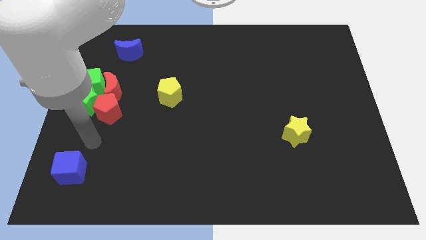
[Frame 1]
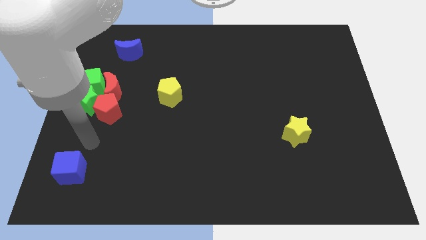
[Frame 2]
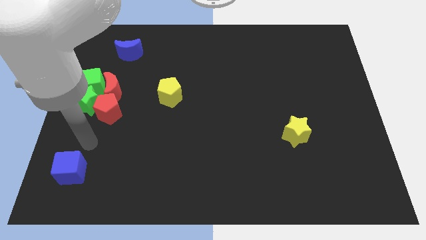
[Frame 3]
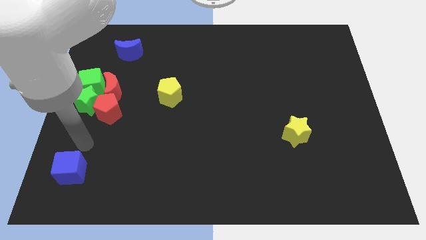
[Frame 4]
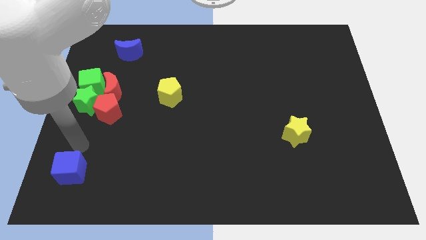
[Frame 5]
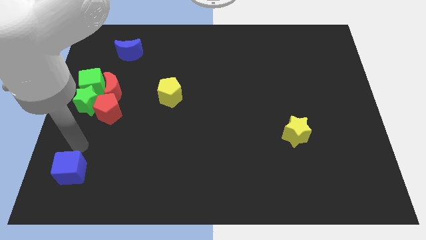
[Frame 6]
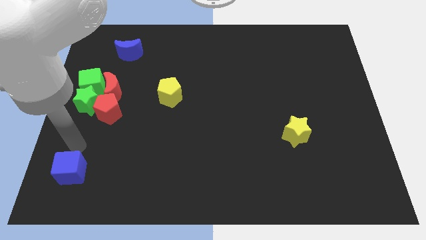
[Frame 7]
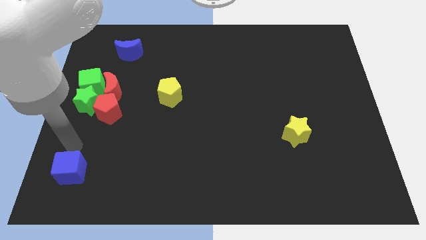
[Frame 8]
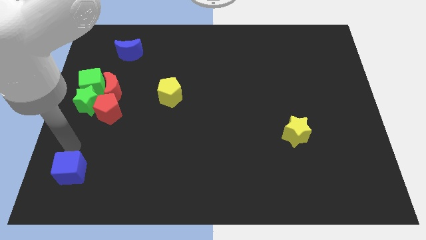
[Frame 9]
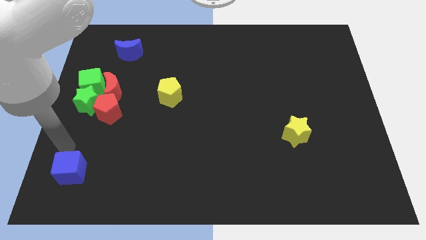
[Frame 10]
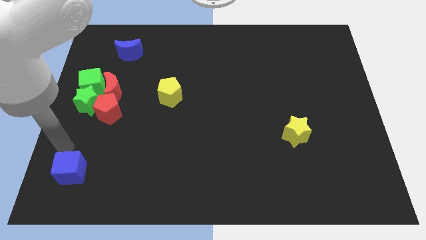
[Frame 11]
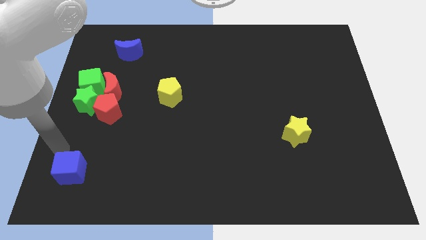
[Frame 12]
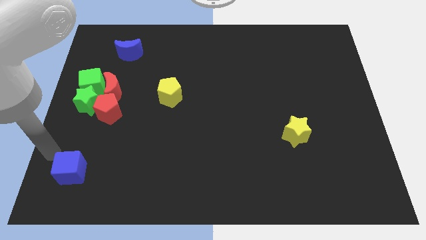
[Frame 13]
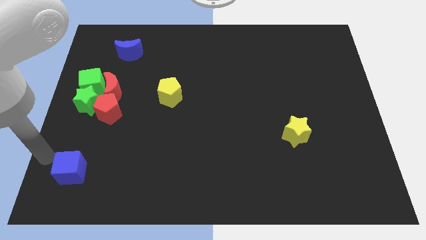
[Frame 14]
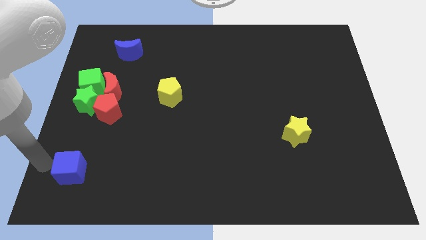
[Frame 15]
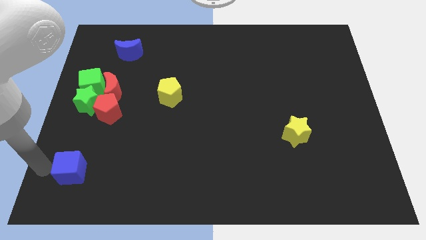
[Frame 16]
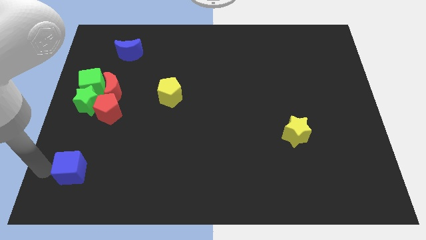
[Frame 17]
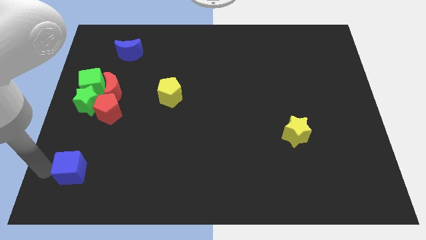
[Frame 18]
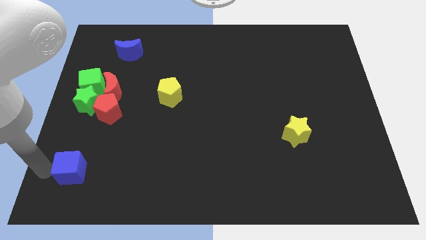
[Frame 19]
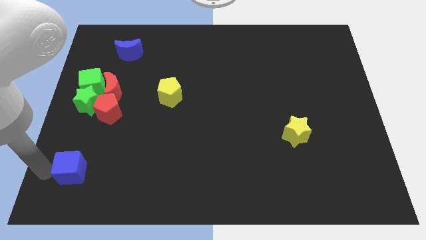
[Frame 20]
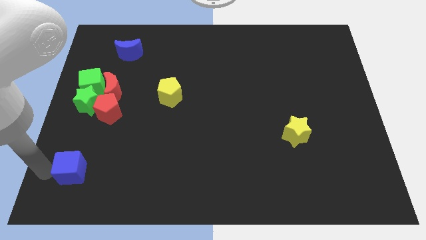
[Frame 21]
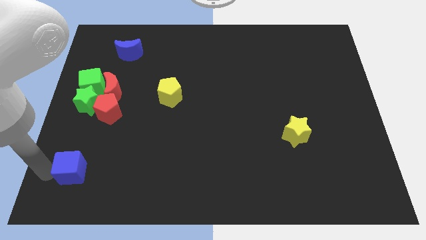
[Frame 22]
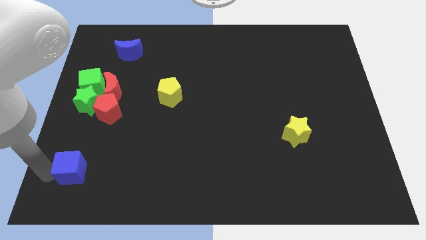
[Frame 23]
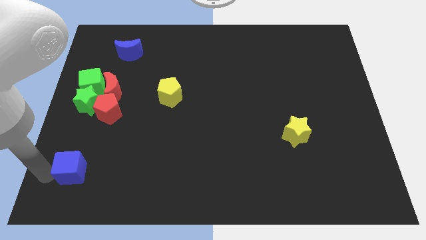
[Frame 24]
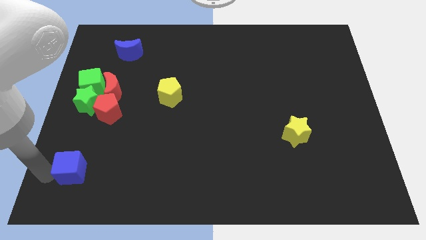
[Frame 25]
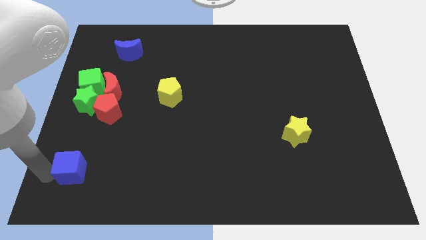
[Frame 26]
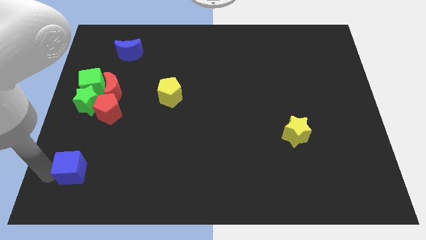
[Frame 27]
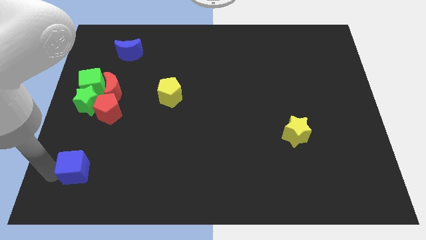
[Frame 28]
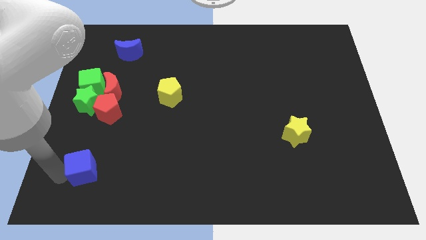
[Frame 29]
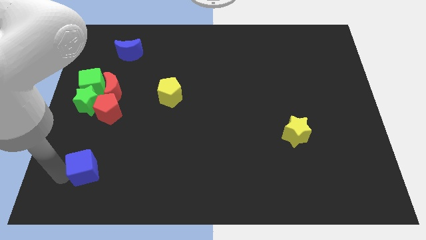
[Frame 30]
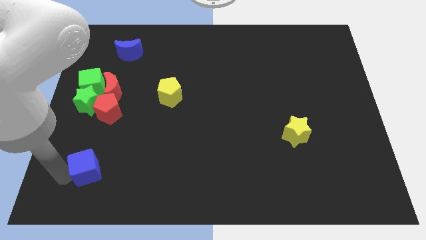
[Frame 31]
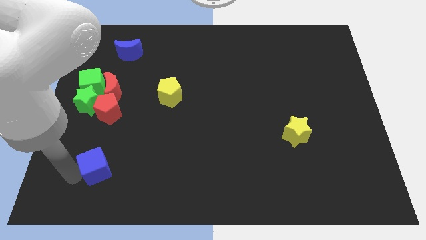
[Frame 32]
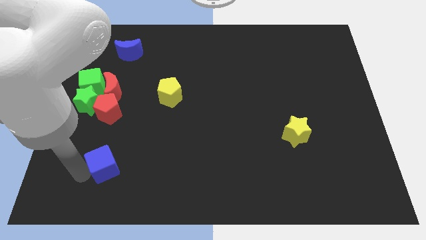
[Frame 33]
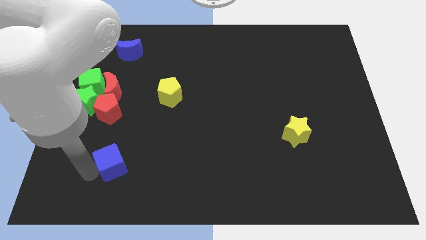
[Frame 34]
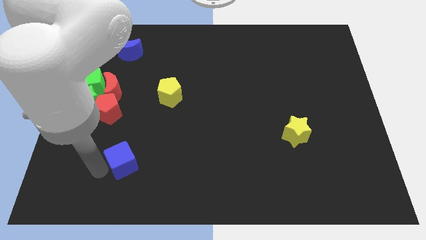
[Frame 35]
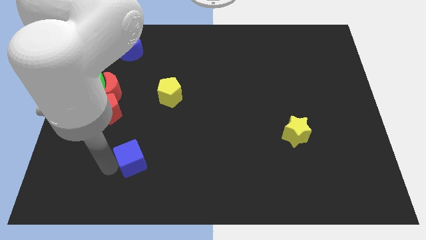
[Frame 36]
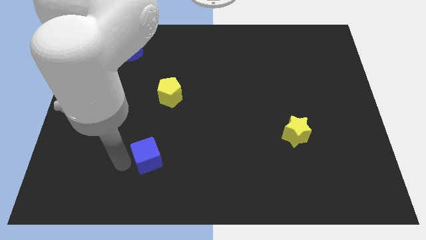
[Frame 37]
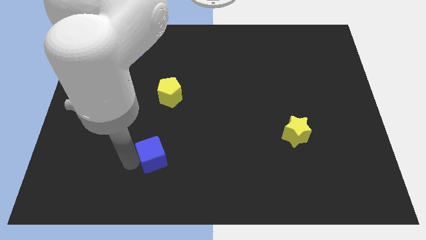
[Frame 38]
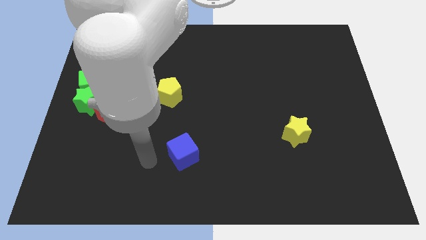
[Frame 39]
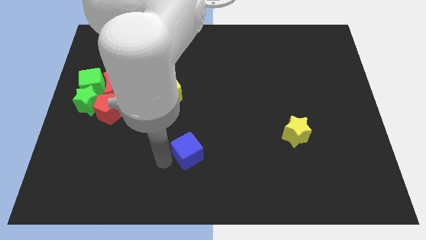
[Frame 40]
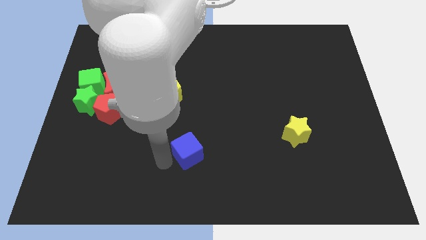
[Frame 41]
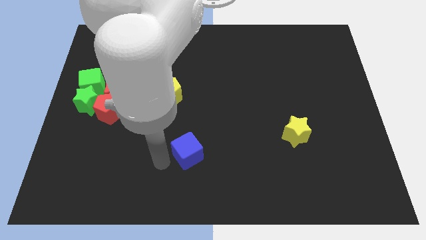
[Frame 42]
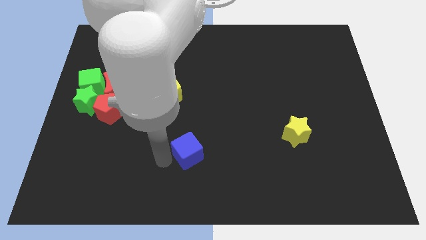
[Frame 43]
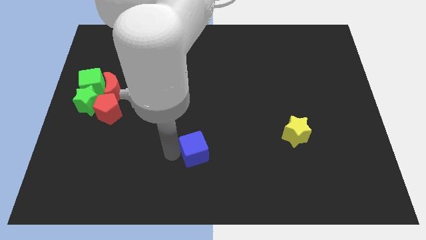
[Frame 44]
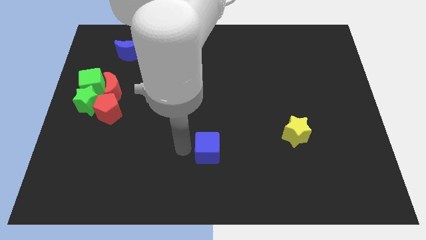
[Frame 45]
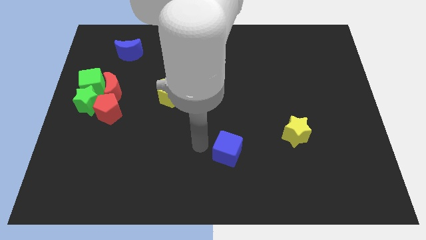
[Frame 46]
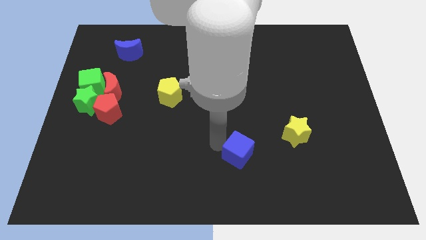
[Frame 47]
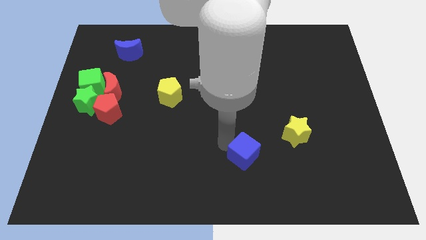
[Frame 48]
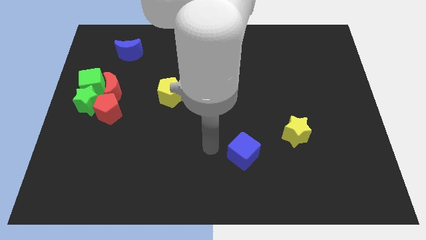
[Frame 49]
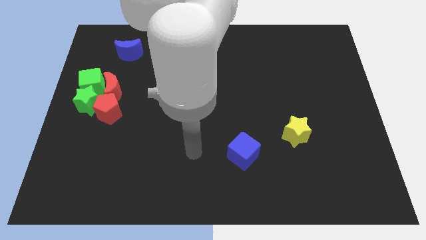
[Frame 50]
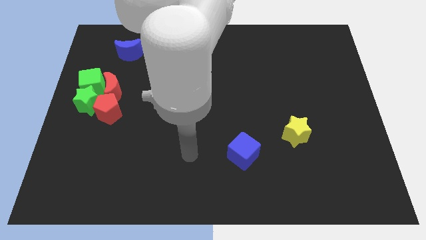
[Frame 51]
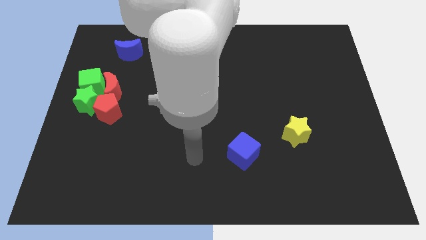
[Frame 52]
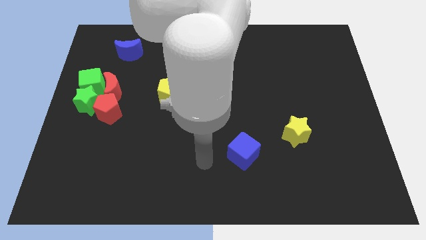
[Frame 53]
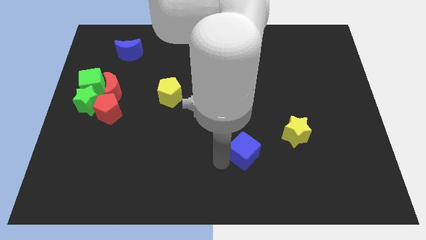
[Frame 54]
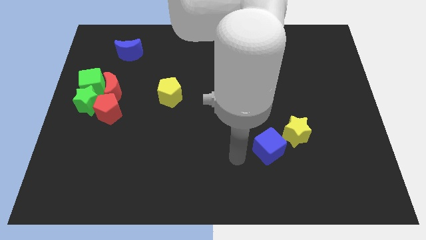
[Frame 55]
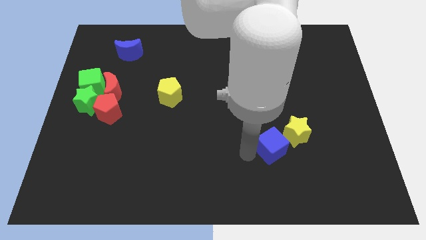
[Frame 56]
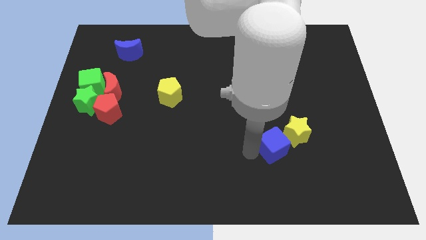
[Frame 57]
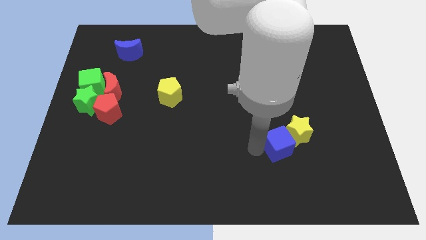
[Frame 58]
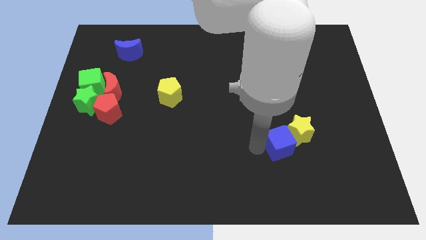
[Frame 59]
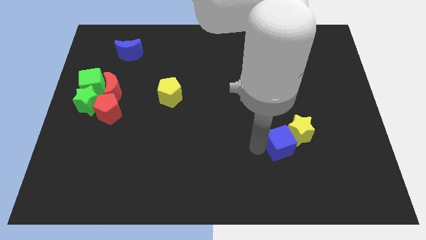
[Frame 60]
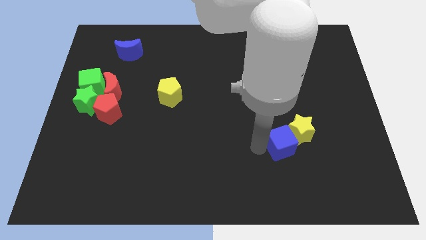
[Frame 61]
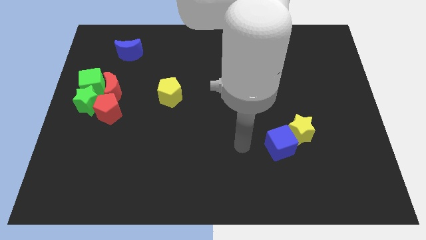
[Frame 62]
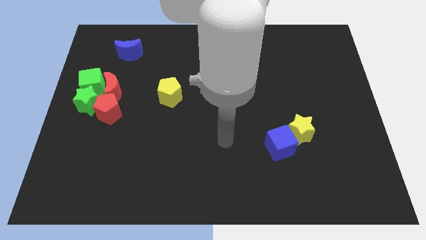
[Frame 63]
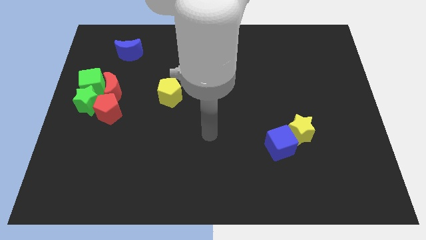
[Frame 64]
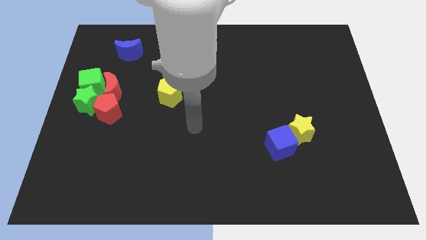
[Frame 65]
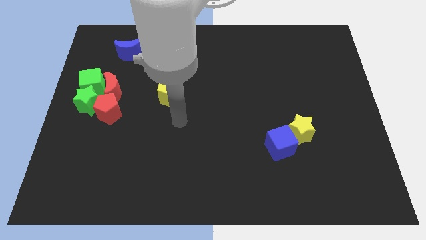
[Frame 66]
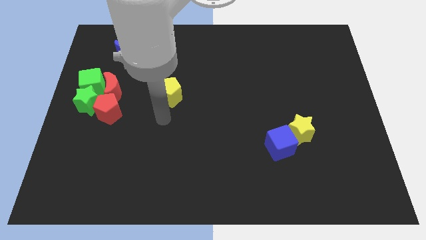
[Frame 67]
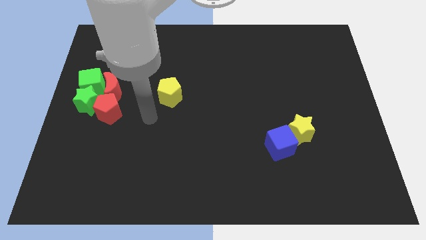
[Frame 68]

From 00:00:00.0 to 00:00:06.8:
push the blue cube into the yellow star

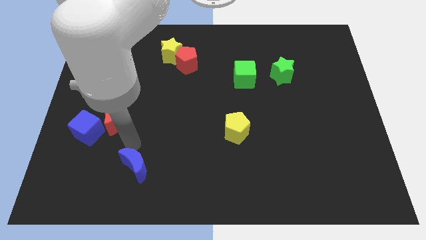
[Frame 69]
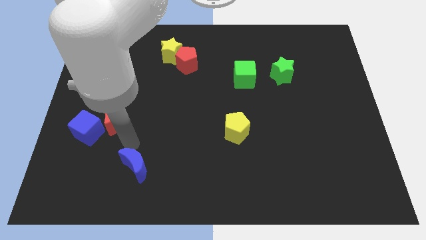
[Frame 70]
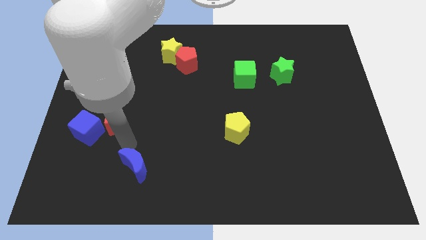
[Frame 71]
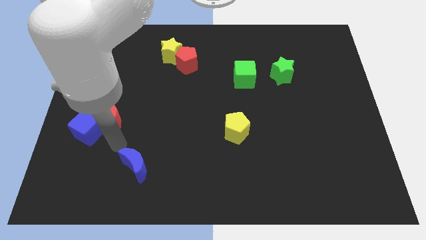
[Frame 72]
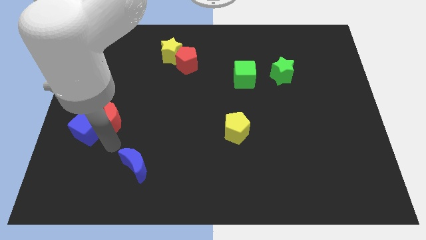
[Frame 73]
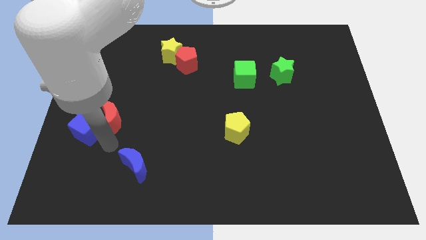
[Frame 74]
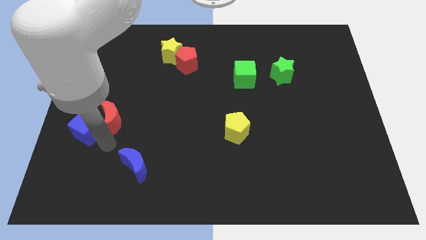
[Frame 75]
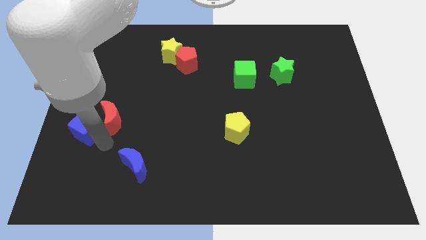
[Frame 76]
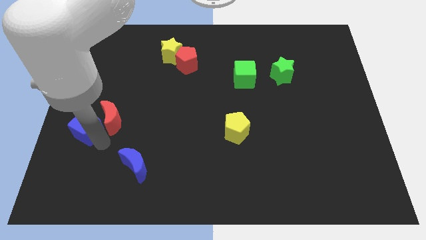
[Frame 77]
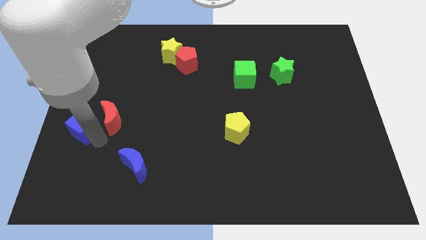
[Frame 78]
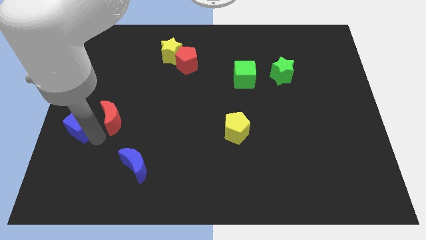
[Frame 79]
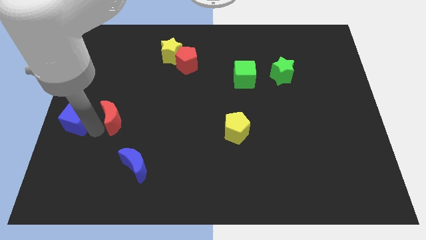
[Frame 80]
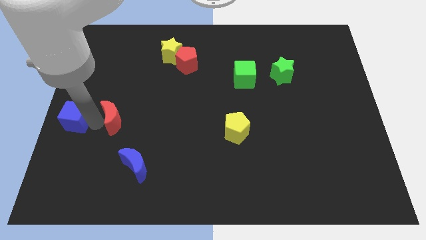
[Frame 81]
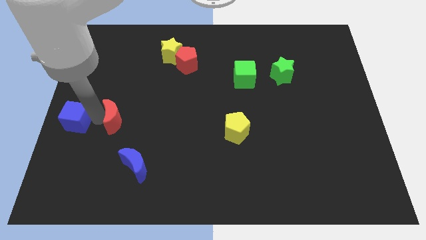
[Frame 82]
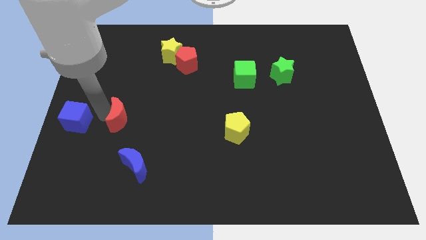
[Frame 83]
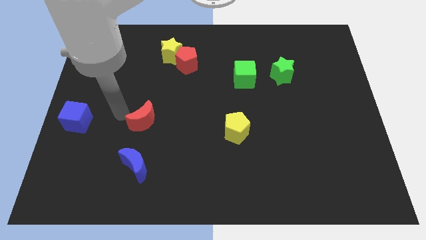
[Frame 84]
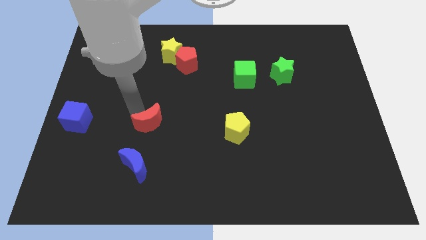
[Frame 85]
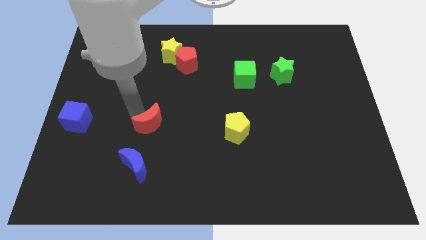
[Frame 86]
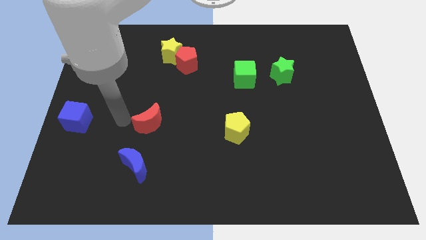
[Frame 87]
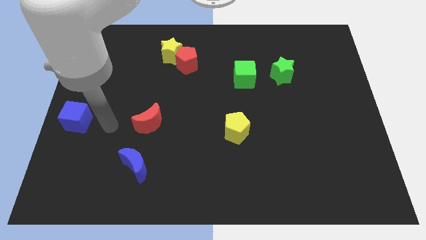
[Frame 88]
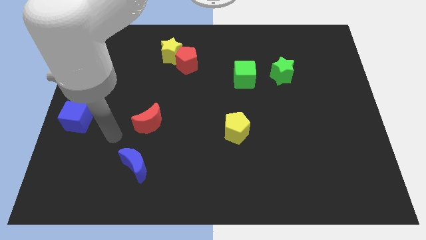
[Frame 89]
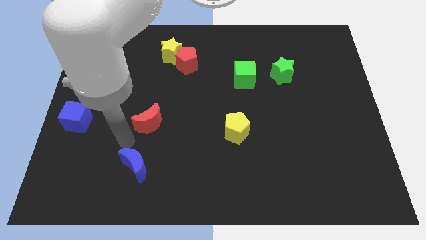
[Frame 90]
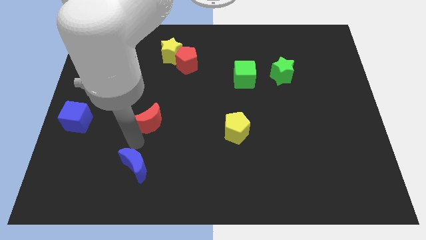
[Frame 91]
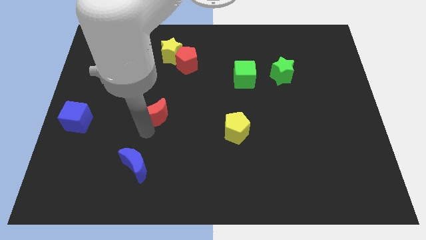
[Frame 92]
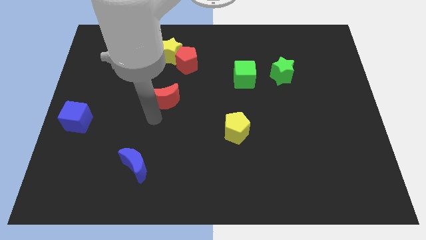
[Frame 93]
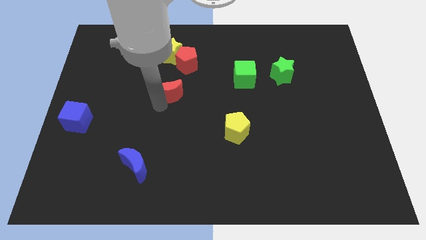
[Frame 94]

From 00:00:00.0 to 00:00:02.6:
separate the red crescent from the blue cube
